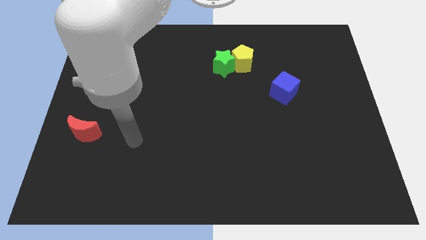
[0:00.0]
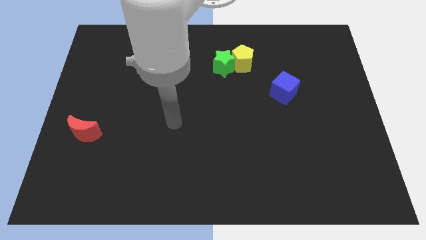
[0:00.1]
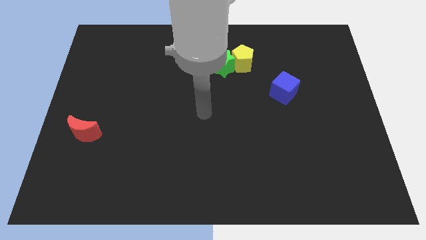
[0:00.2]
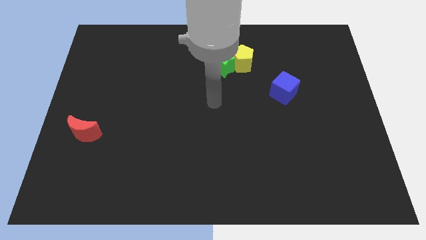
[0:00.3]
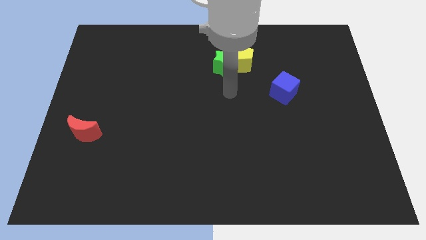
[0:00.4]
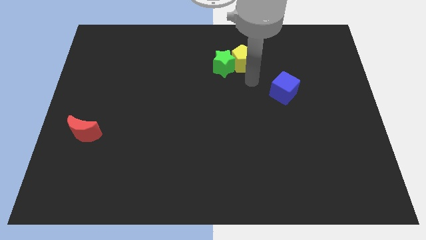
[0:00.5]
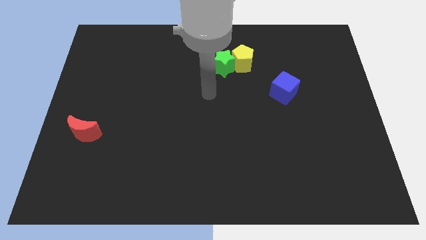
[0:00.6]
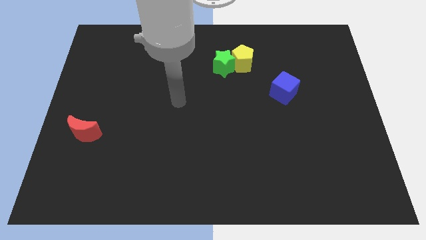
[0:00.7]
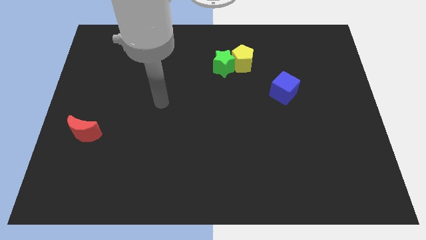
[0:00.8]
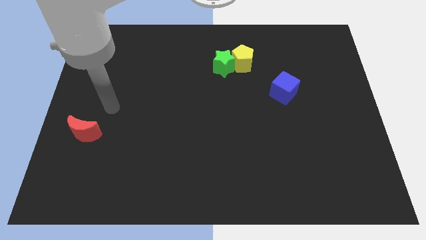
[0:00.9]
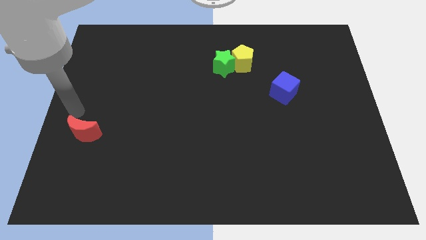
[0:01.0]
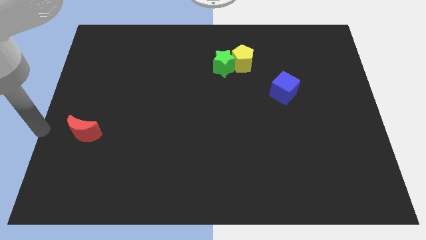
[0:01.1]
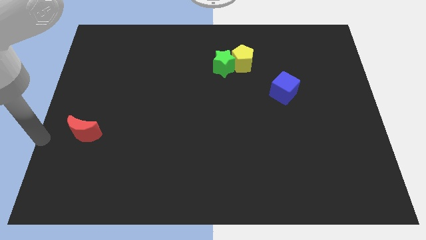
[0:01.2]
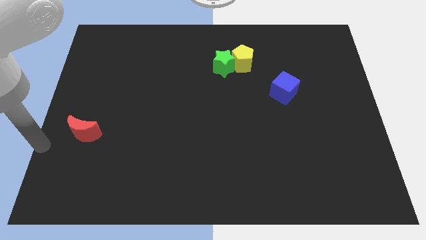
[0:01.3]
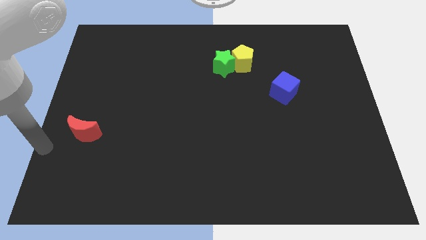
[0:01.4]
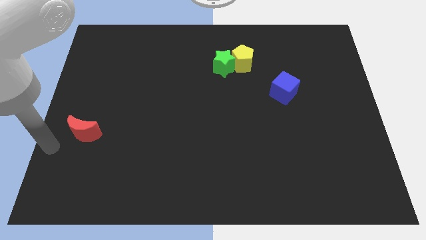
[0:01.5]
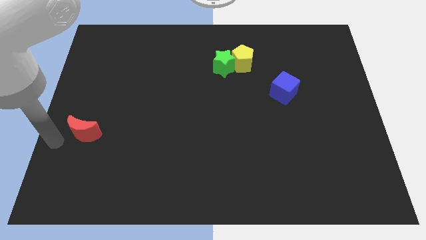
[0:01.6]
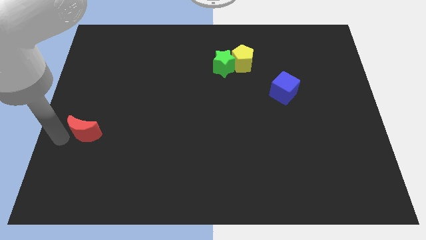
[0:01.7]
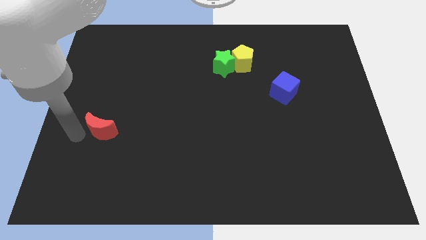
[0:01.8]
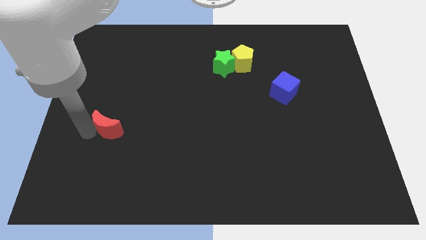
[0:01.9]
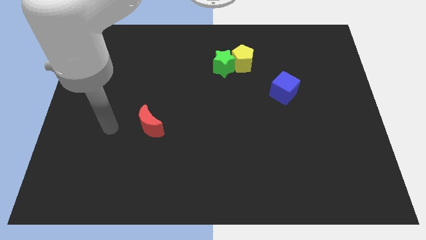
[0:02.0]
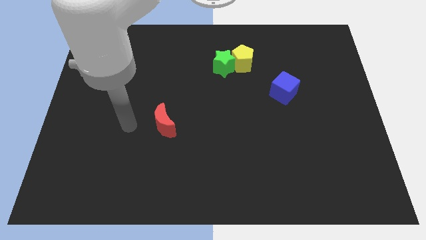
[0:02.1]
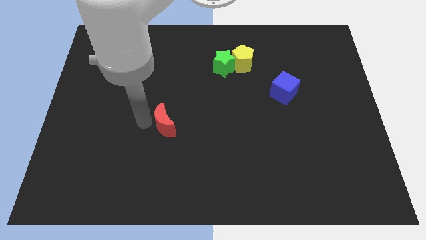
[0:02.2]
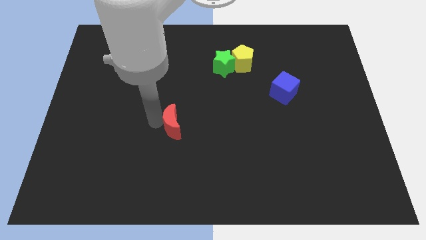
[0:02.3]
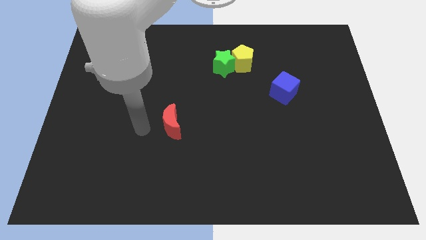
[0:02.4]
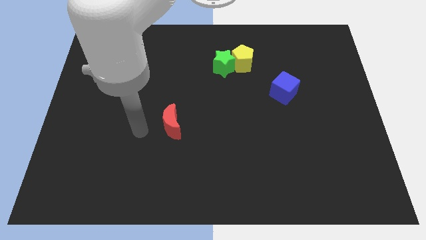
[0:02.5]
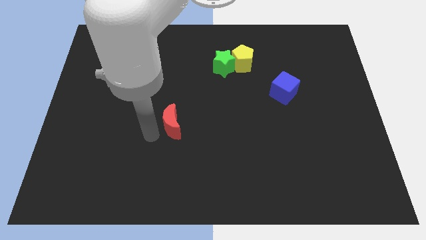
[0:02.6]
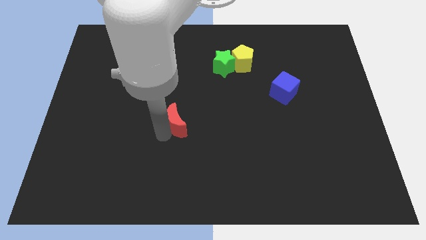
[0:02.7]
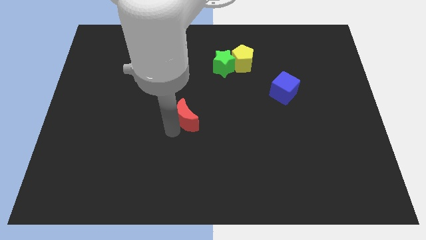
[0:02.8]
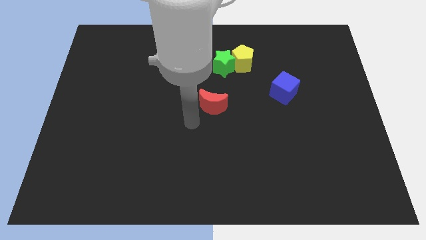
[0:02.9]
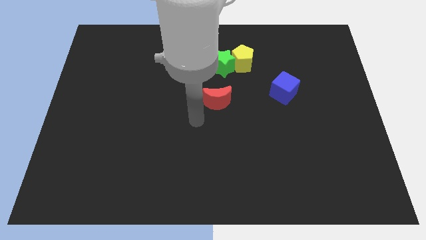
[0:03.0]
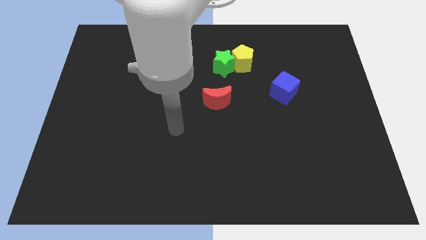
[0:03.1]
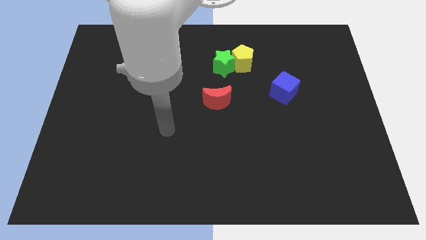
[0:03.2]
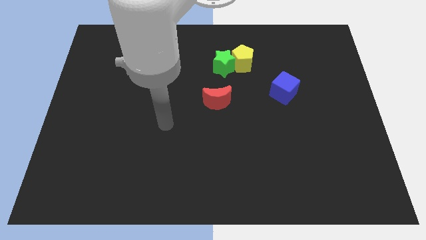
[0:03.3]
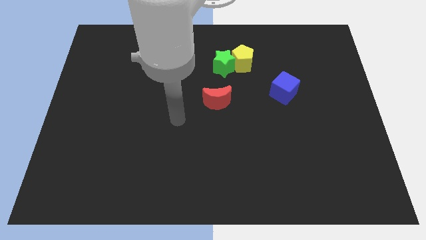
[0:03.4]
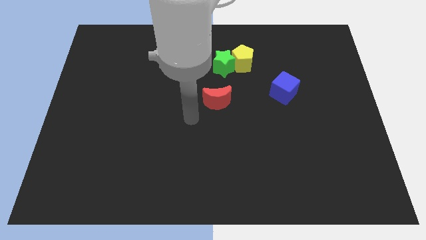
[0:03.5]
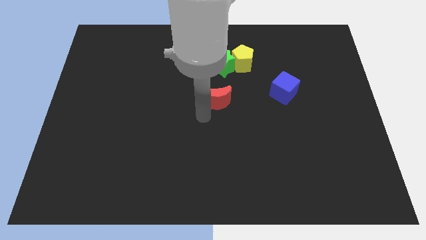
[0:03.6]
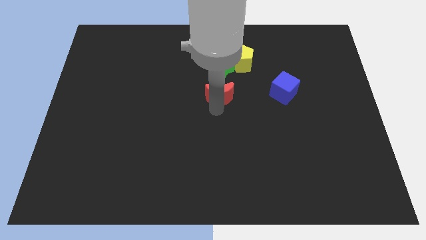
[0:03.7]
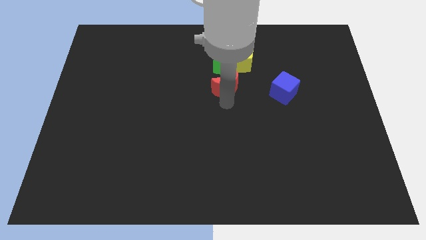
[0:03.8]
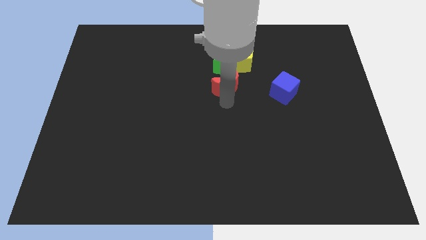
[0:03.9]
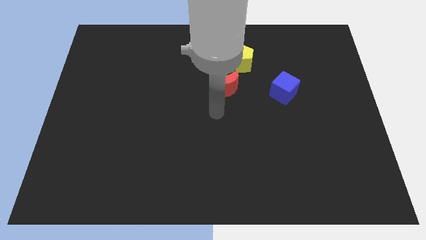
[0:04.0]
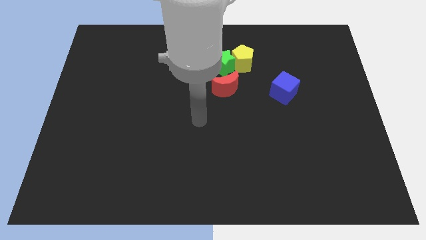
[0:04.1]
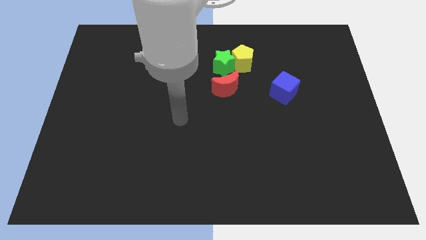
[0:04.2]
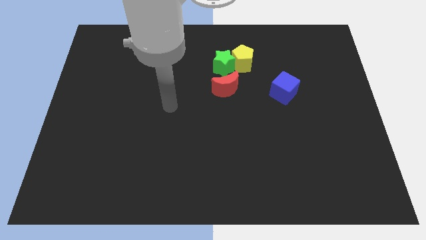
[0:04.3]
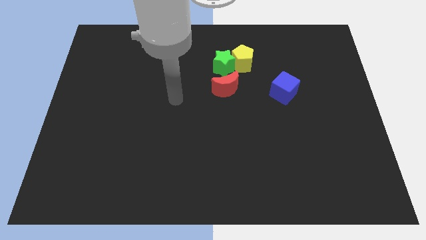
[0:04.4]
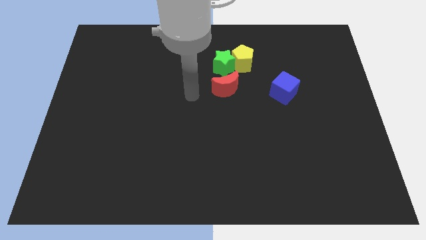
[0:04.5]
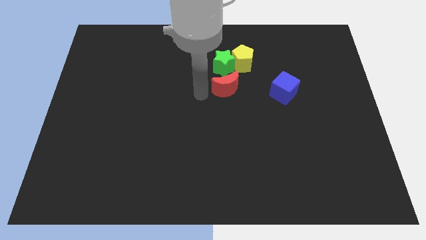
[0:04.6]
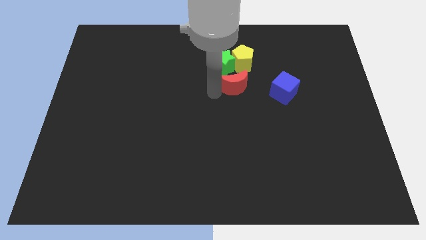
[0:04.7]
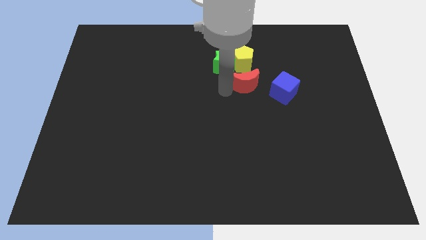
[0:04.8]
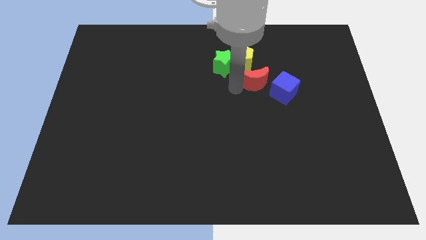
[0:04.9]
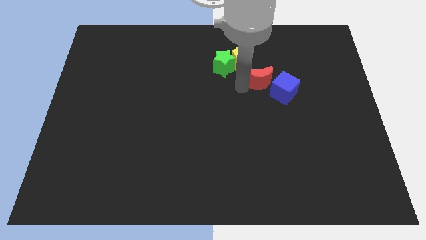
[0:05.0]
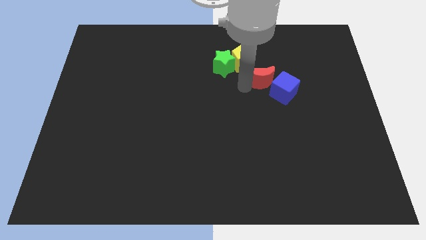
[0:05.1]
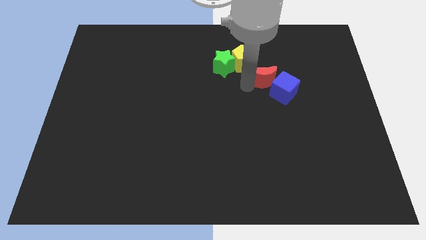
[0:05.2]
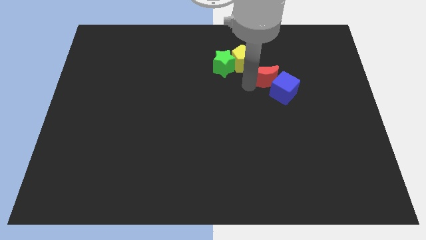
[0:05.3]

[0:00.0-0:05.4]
put the red moon towards the cube

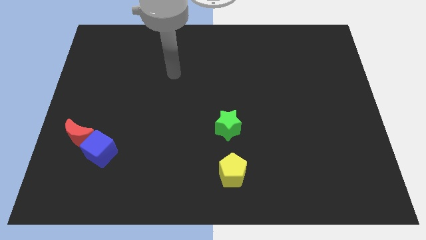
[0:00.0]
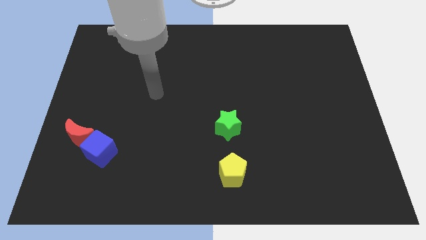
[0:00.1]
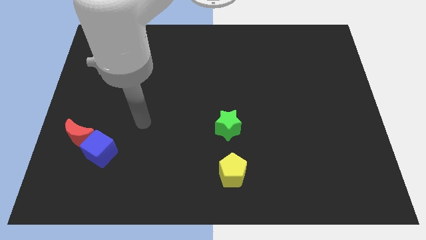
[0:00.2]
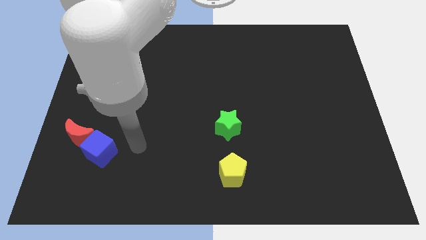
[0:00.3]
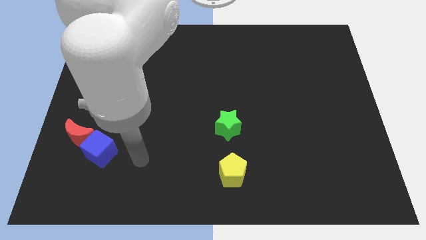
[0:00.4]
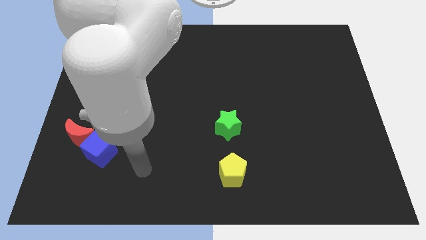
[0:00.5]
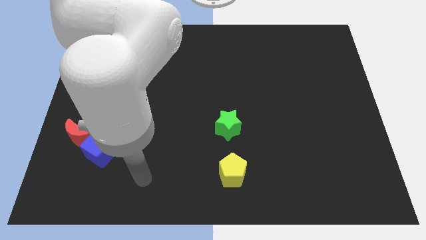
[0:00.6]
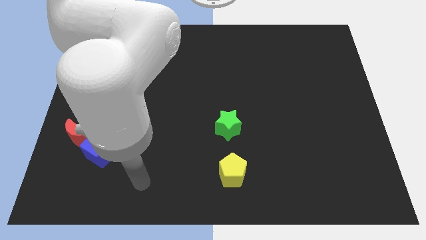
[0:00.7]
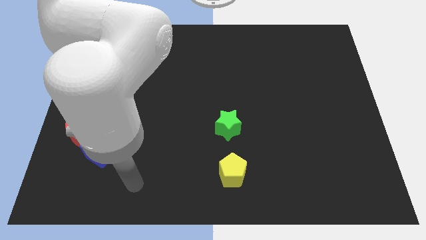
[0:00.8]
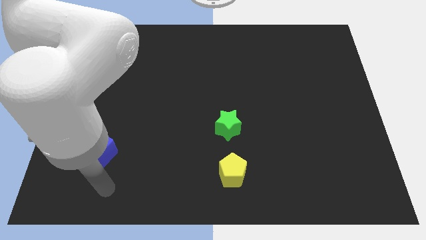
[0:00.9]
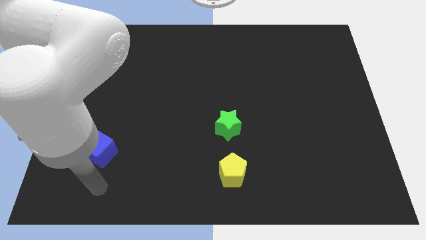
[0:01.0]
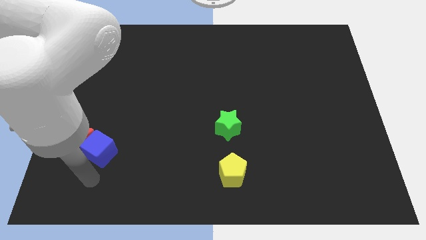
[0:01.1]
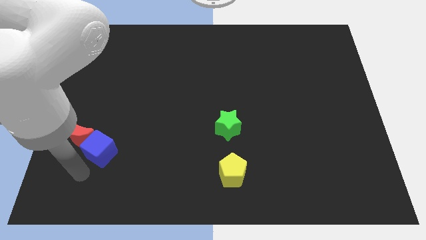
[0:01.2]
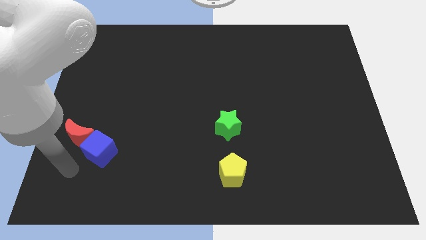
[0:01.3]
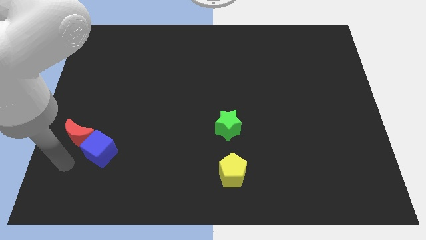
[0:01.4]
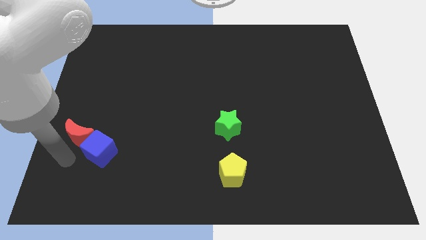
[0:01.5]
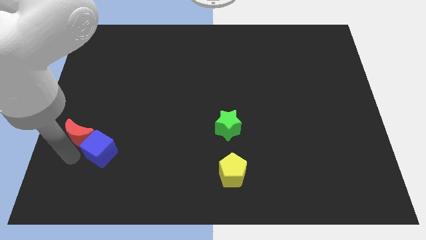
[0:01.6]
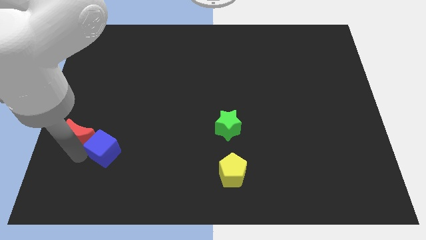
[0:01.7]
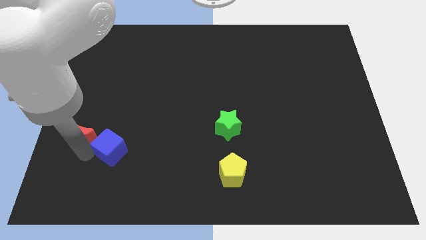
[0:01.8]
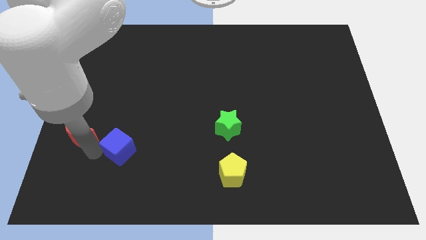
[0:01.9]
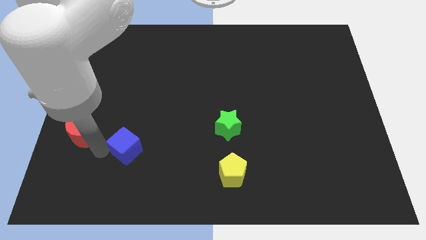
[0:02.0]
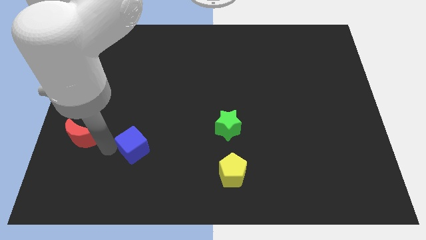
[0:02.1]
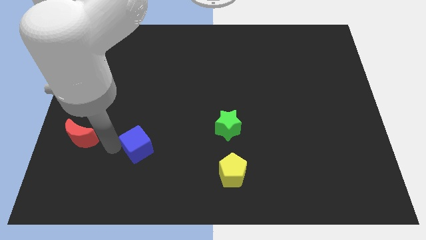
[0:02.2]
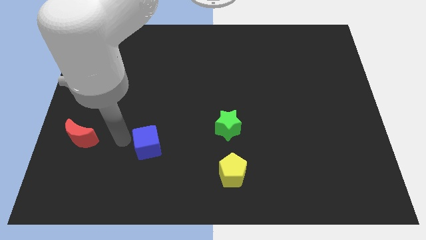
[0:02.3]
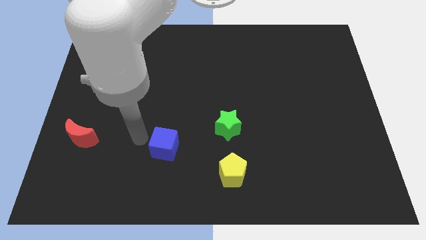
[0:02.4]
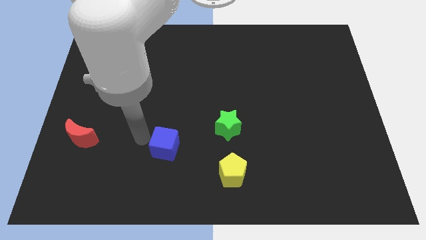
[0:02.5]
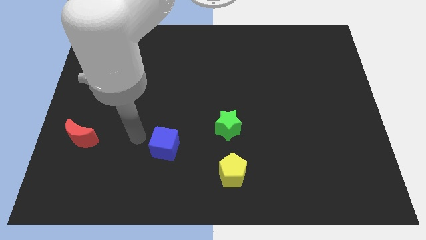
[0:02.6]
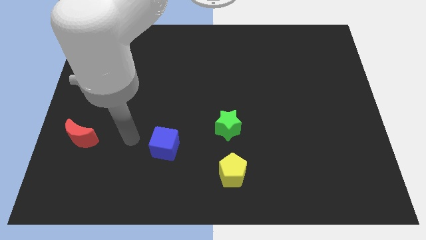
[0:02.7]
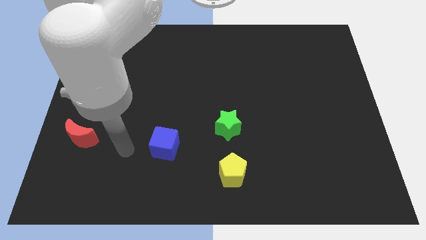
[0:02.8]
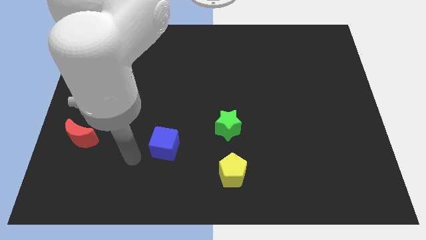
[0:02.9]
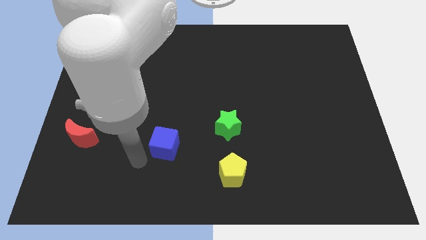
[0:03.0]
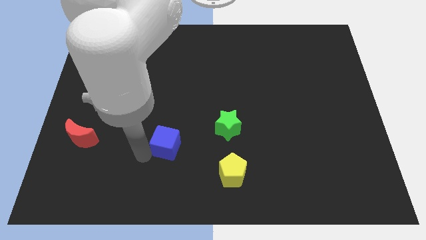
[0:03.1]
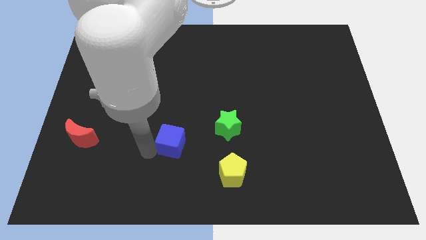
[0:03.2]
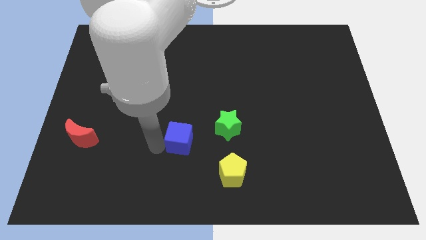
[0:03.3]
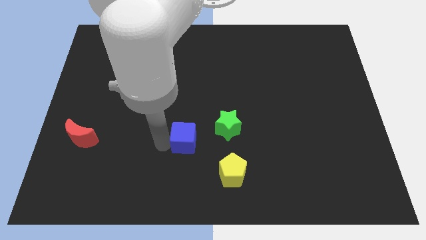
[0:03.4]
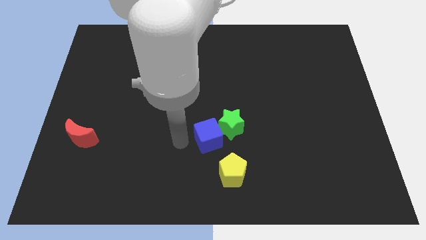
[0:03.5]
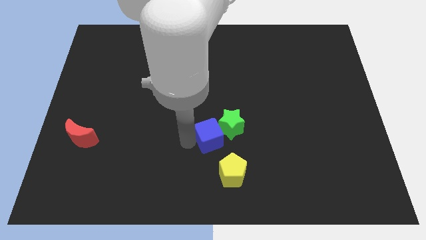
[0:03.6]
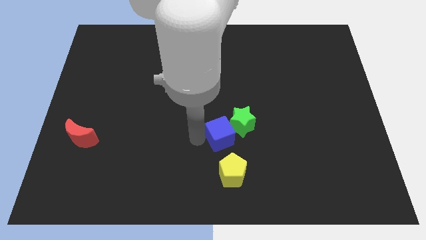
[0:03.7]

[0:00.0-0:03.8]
move the blue block towards the star
